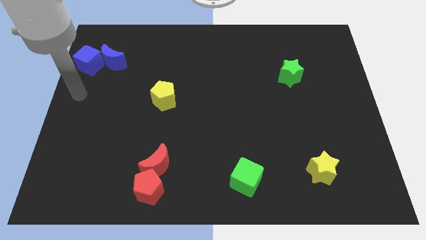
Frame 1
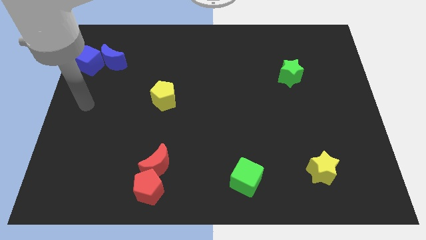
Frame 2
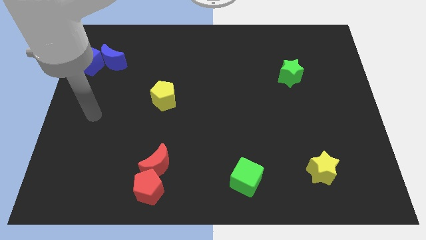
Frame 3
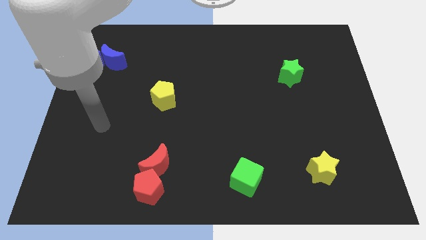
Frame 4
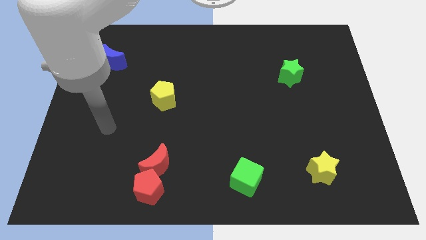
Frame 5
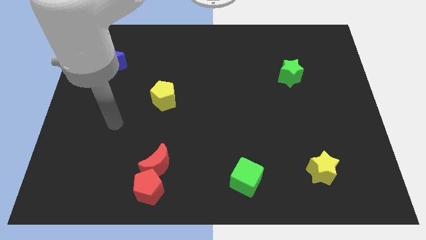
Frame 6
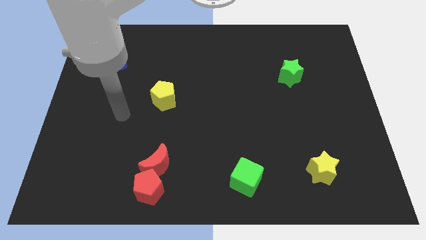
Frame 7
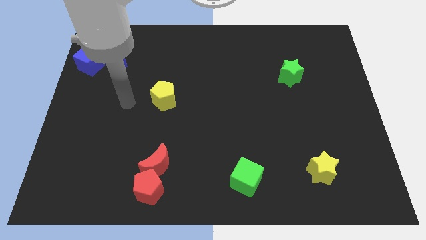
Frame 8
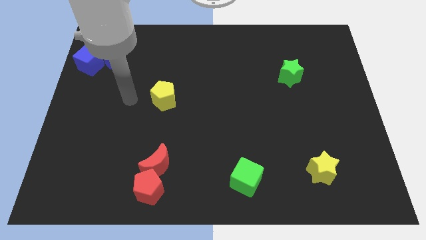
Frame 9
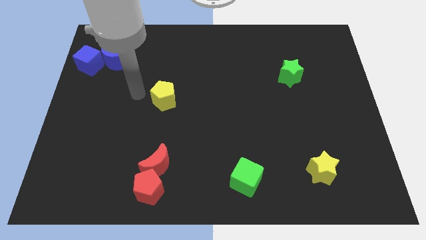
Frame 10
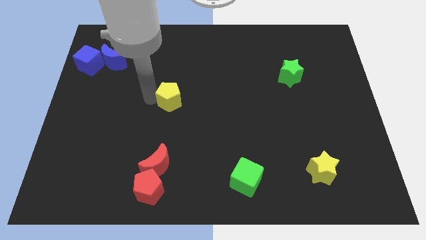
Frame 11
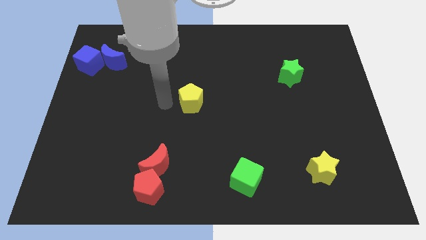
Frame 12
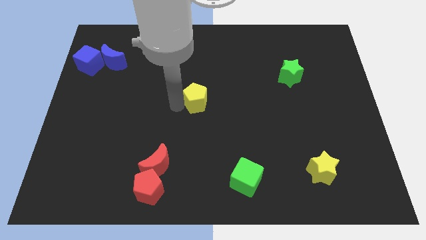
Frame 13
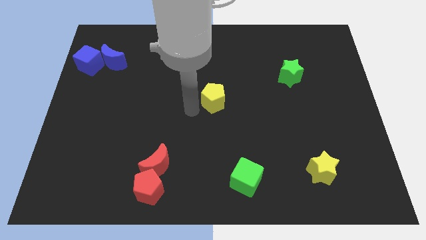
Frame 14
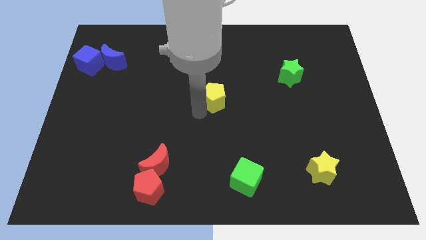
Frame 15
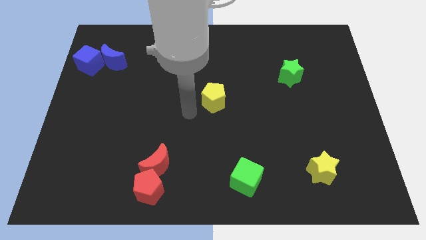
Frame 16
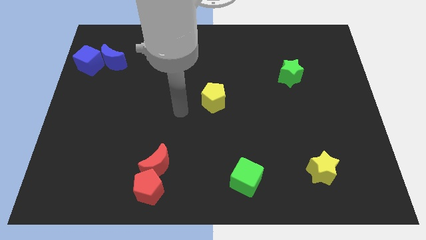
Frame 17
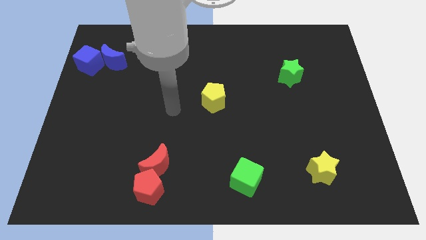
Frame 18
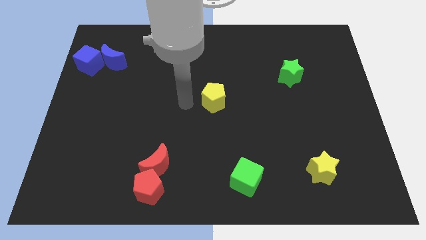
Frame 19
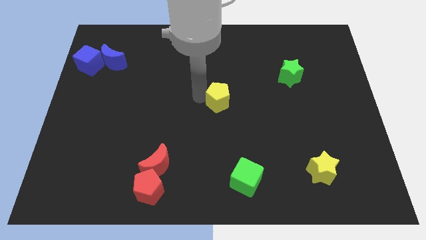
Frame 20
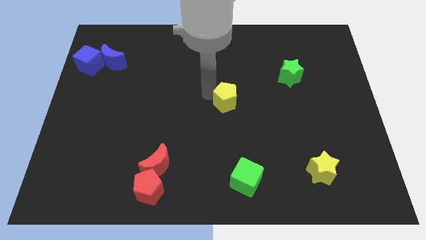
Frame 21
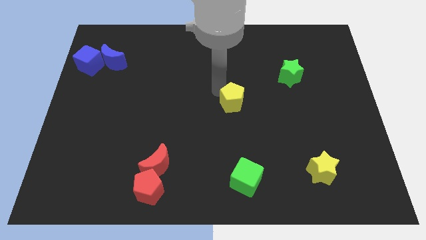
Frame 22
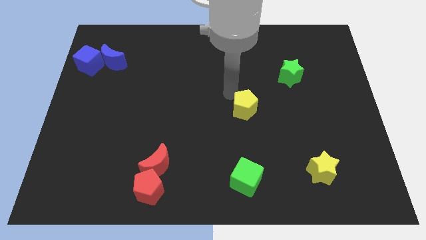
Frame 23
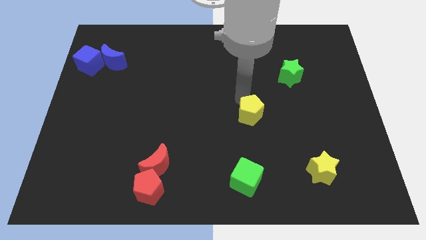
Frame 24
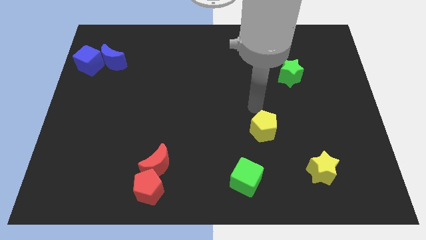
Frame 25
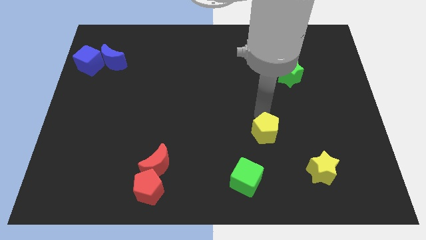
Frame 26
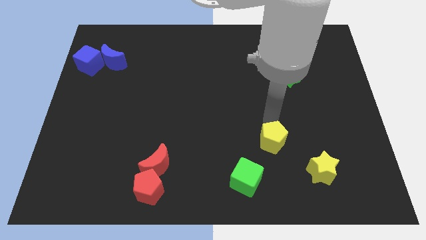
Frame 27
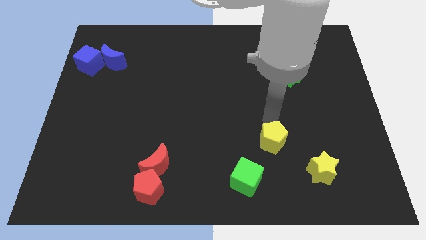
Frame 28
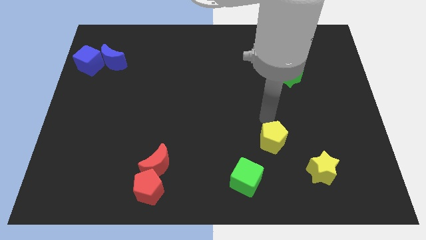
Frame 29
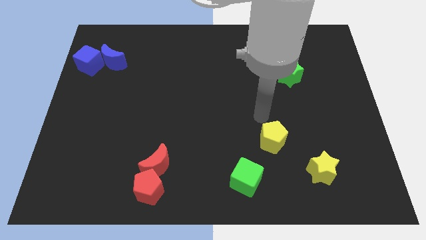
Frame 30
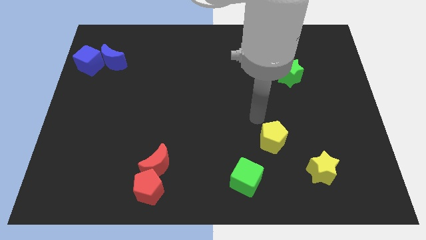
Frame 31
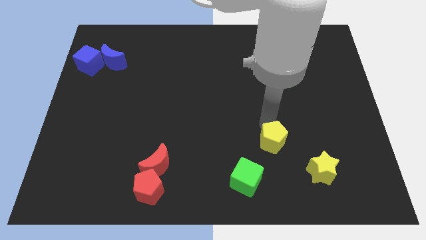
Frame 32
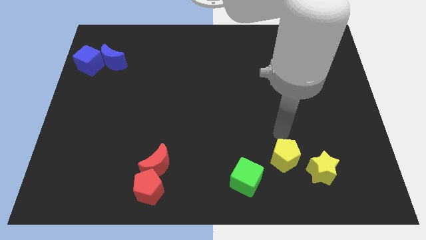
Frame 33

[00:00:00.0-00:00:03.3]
push the yellow pentagon to the top right of the green cube

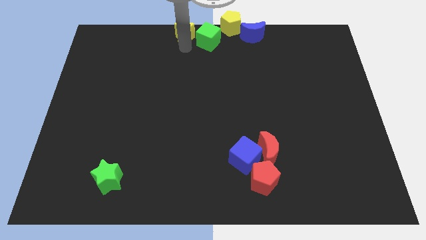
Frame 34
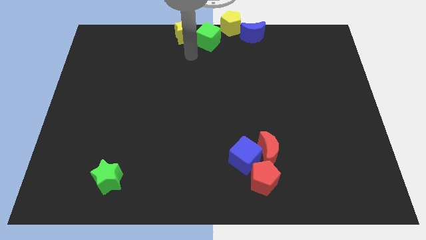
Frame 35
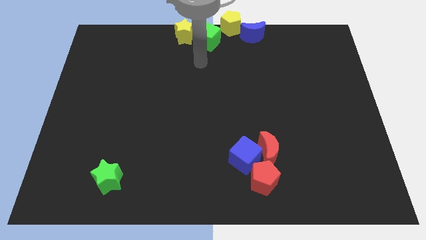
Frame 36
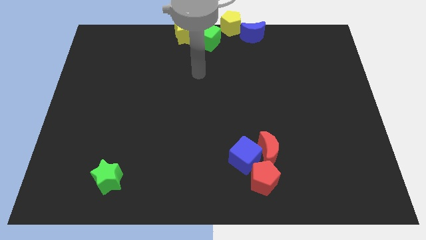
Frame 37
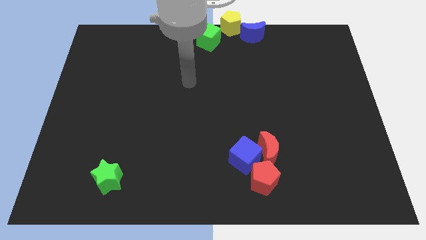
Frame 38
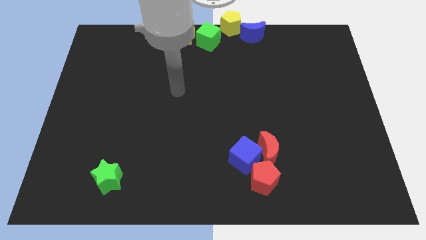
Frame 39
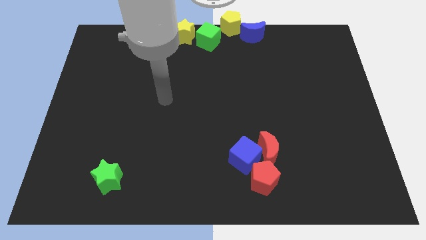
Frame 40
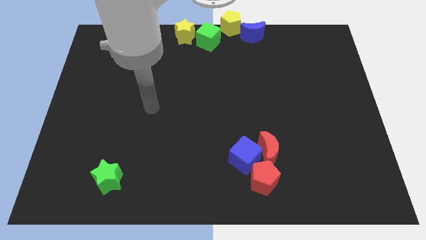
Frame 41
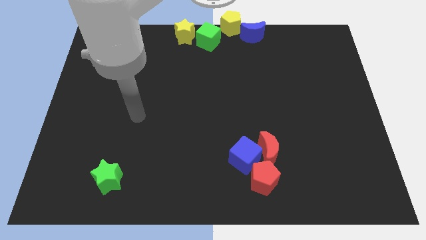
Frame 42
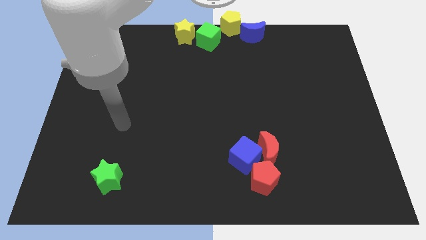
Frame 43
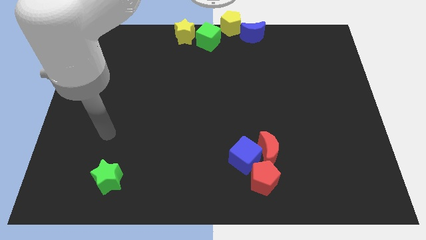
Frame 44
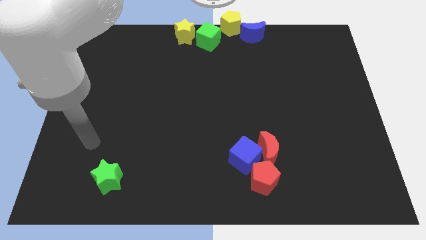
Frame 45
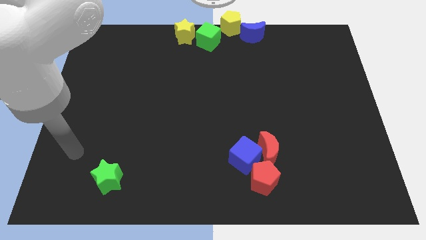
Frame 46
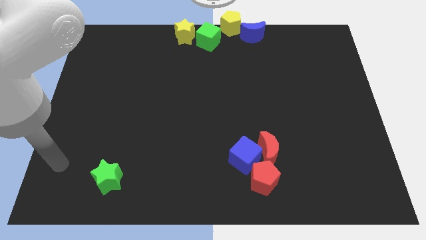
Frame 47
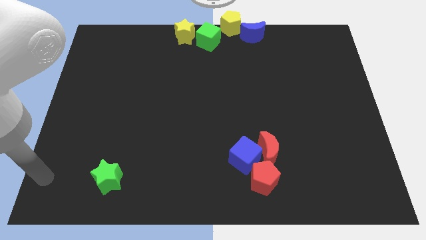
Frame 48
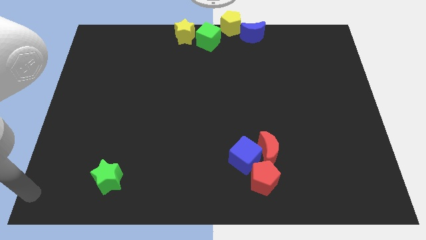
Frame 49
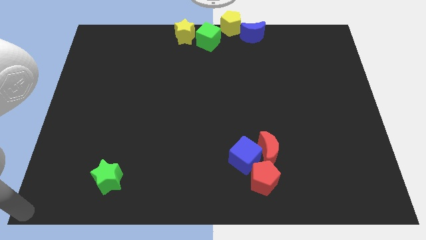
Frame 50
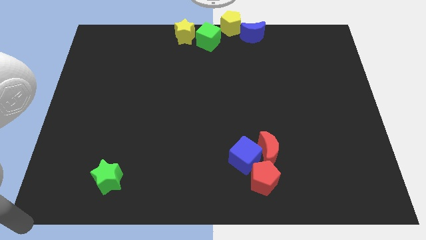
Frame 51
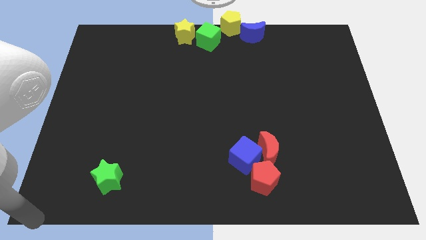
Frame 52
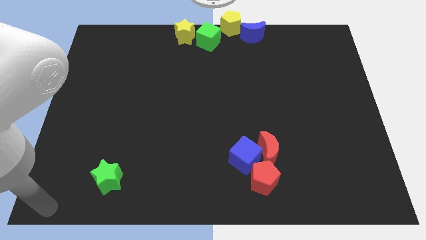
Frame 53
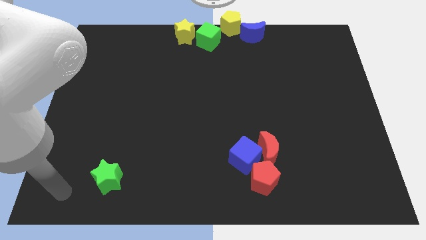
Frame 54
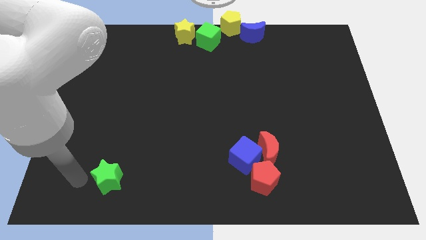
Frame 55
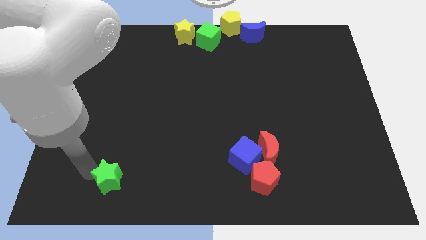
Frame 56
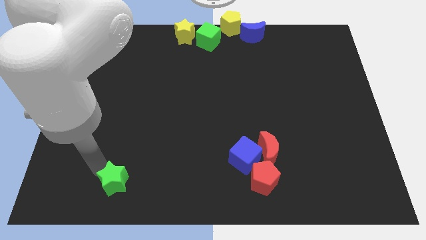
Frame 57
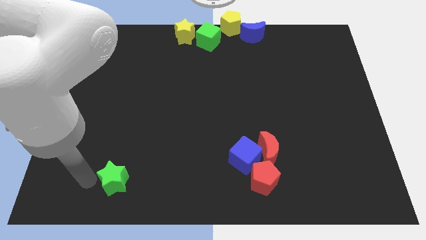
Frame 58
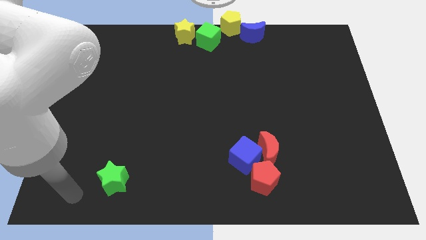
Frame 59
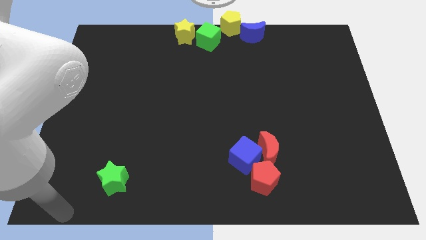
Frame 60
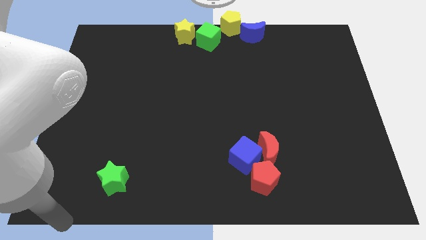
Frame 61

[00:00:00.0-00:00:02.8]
slightly push the green star to the right side

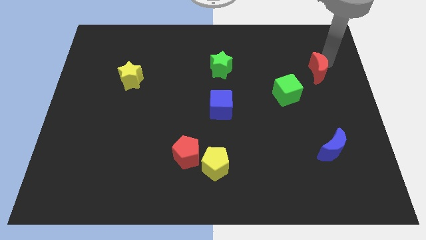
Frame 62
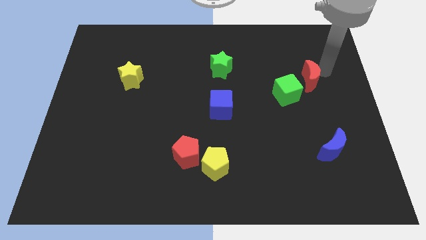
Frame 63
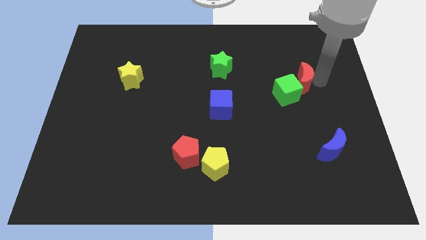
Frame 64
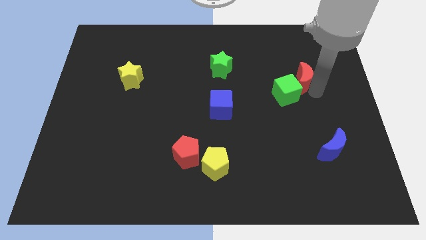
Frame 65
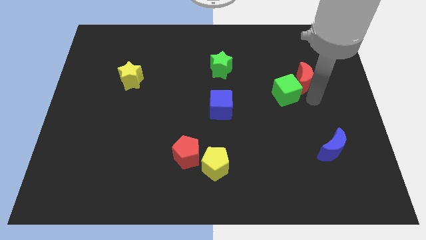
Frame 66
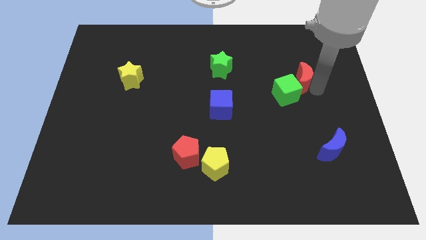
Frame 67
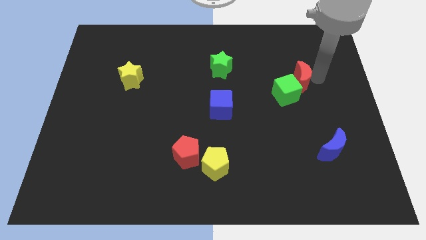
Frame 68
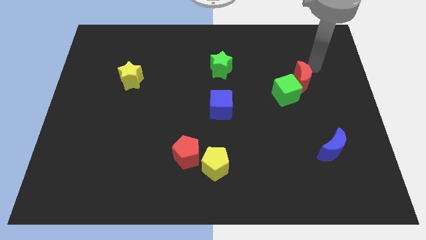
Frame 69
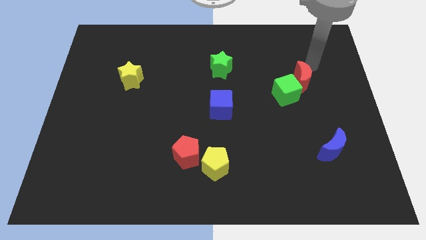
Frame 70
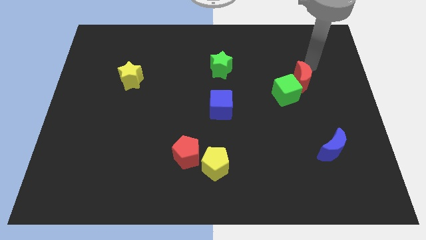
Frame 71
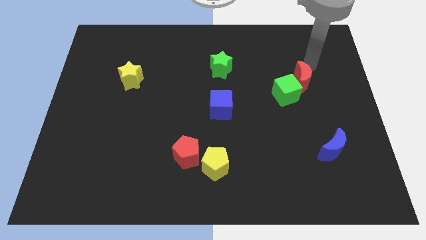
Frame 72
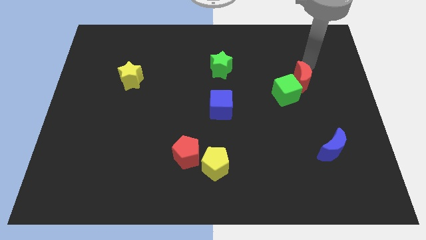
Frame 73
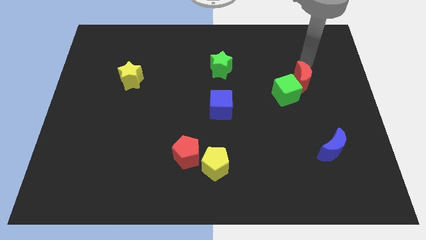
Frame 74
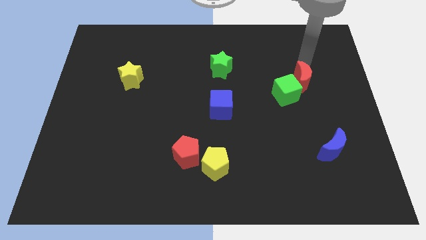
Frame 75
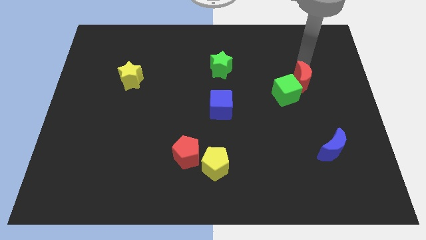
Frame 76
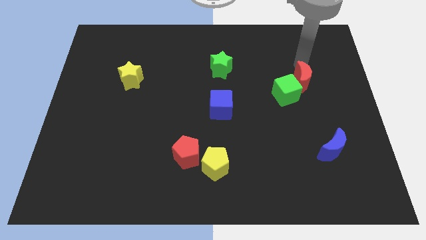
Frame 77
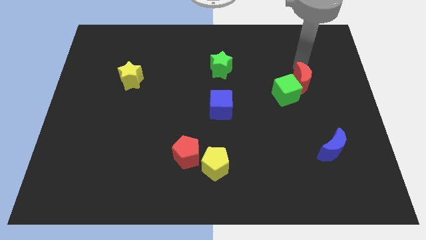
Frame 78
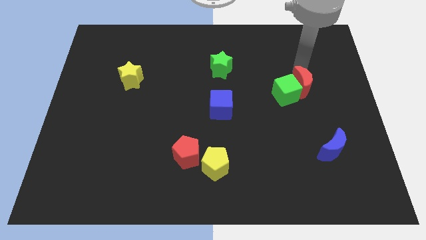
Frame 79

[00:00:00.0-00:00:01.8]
push the red crescent into the green cube

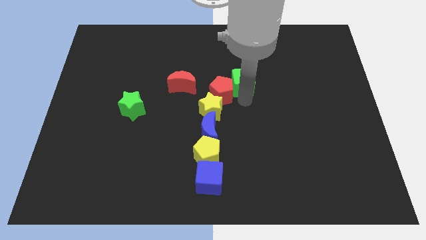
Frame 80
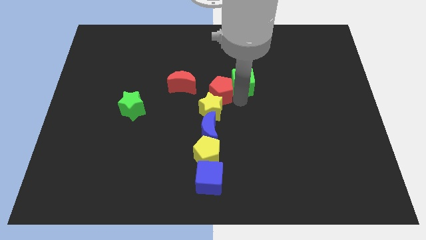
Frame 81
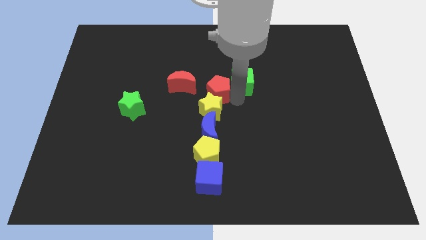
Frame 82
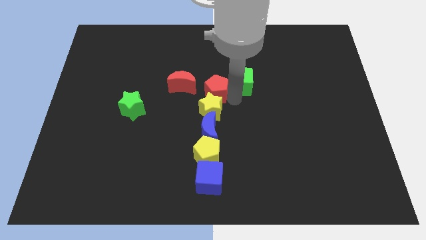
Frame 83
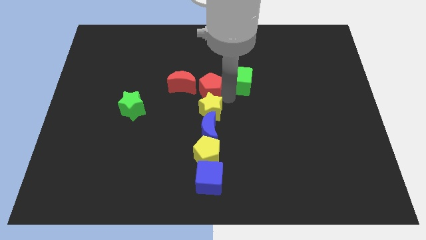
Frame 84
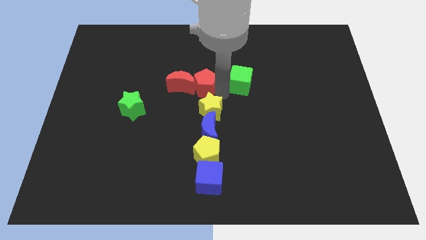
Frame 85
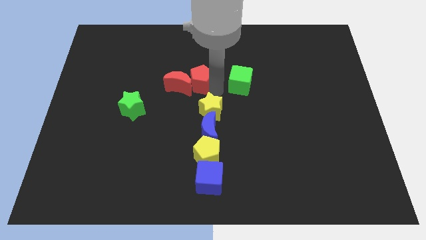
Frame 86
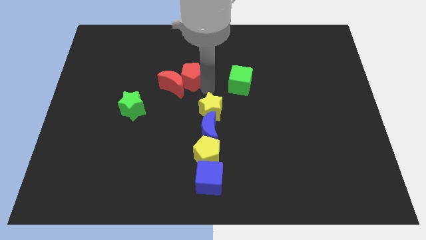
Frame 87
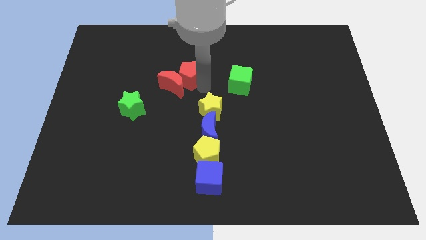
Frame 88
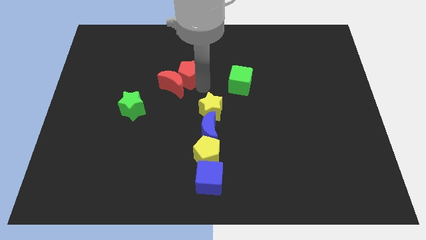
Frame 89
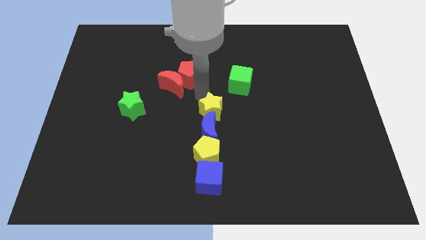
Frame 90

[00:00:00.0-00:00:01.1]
make the red pentagon to touch right side of the red crescent
